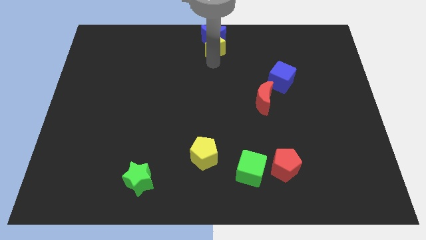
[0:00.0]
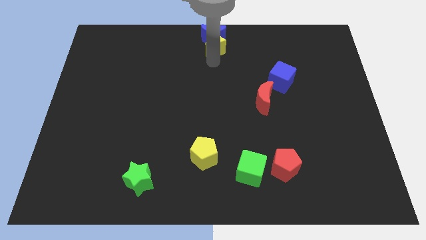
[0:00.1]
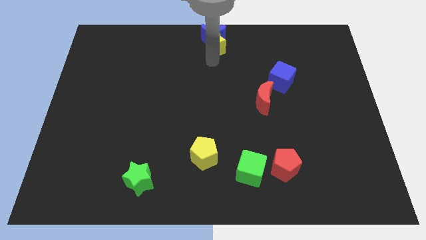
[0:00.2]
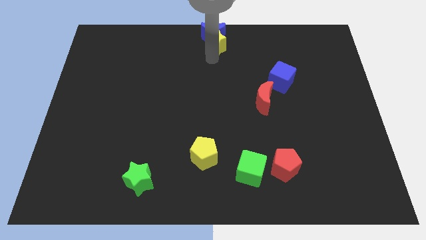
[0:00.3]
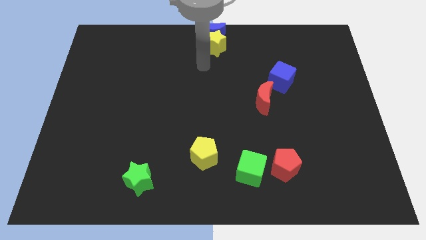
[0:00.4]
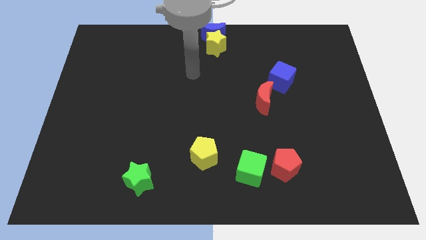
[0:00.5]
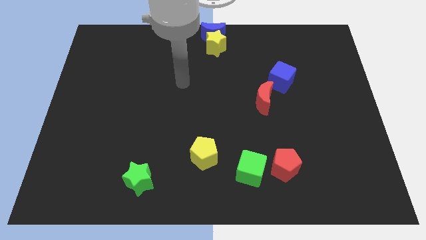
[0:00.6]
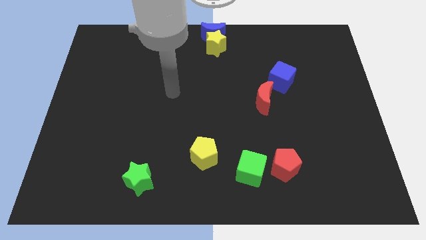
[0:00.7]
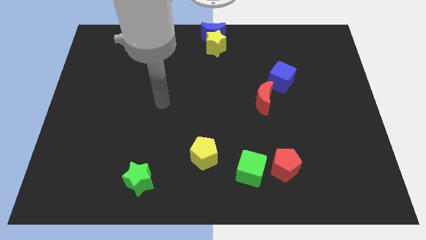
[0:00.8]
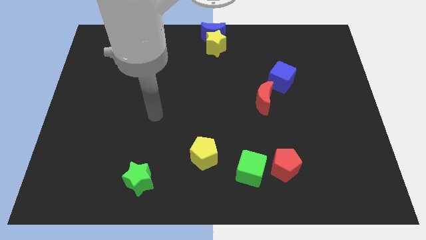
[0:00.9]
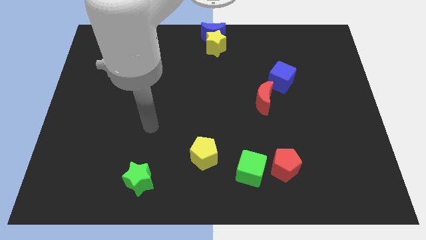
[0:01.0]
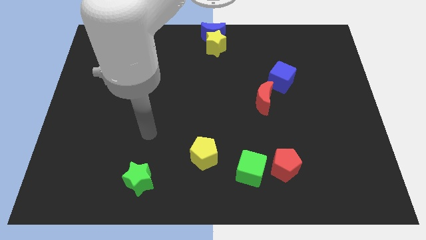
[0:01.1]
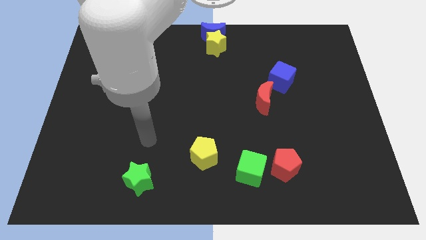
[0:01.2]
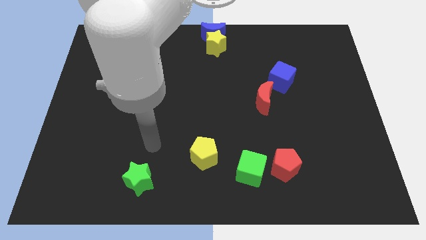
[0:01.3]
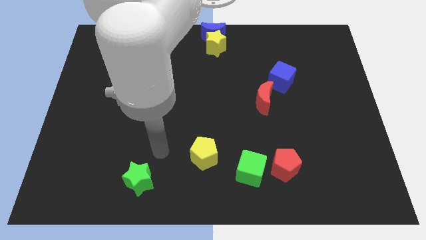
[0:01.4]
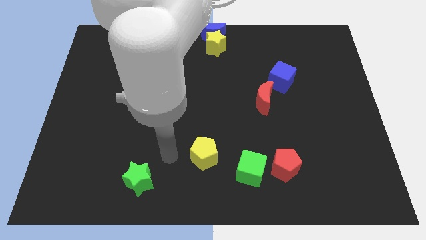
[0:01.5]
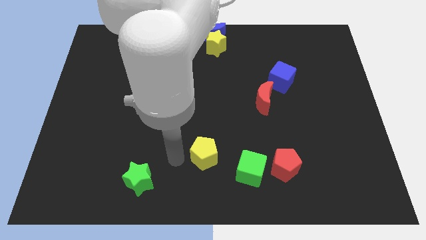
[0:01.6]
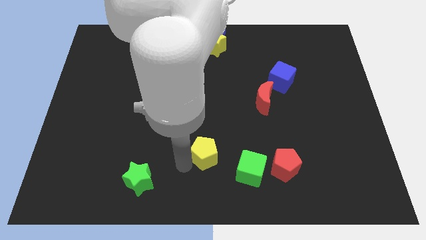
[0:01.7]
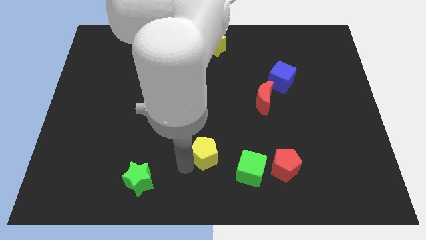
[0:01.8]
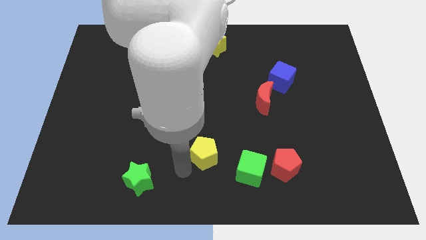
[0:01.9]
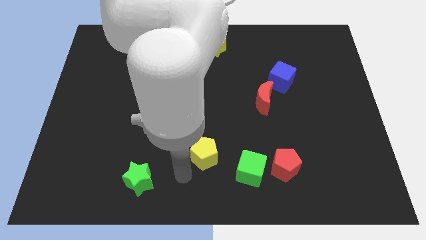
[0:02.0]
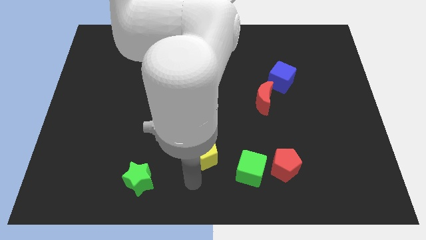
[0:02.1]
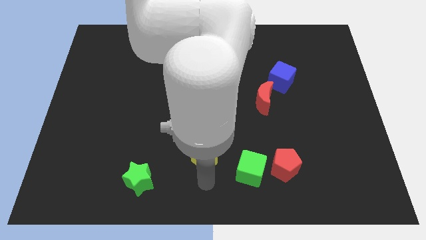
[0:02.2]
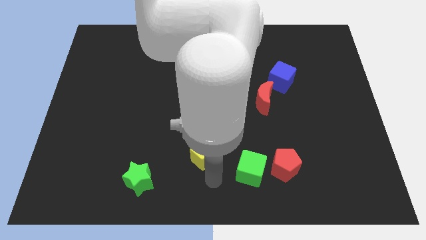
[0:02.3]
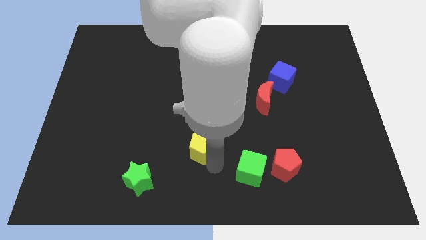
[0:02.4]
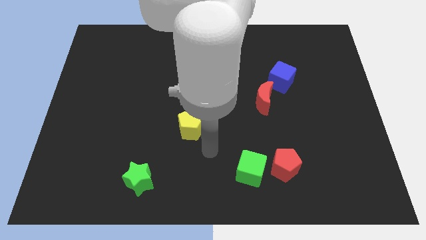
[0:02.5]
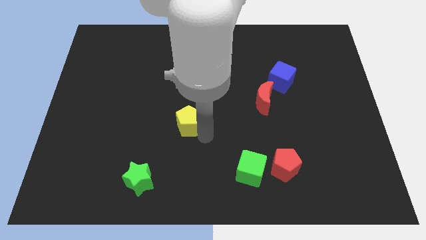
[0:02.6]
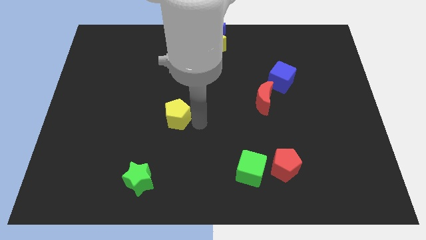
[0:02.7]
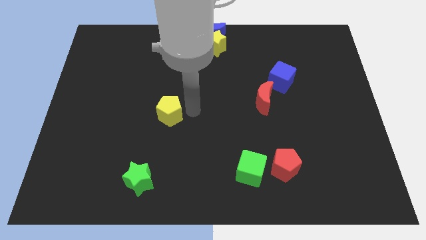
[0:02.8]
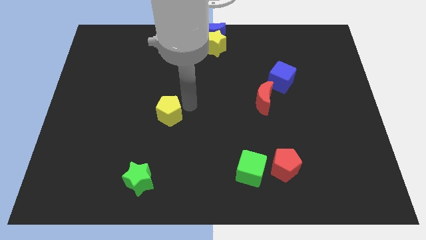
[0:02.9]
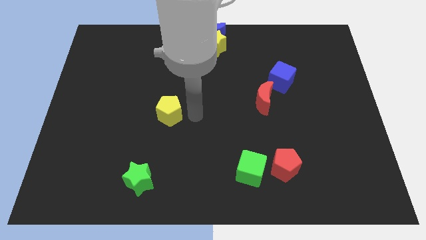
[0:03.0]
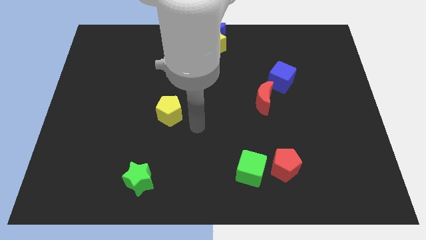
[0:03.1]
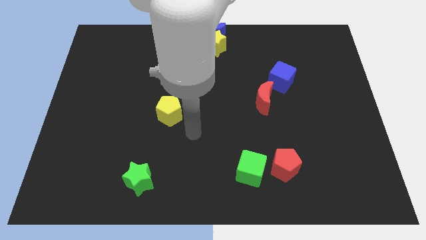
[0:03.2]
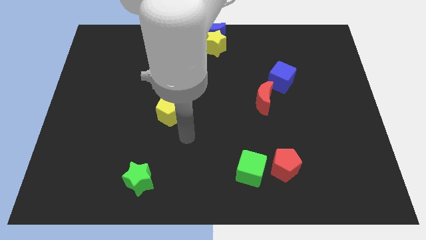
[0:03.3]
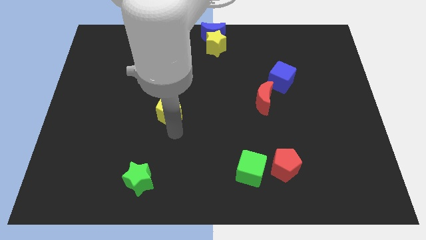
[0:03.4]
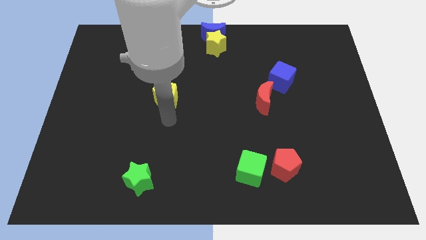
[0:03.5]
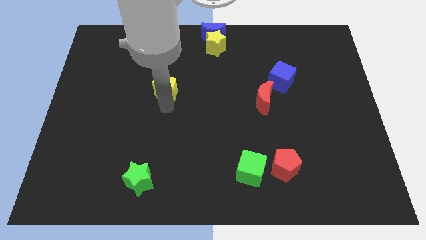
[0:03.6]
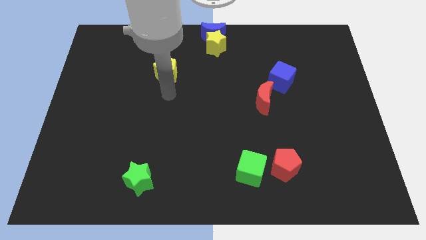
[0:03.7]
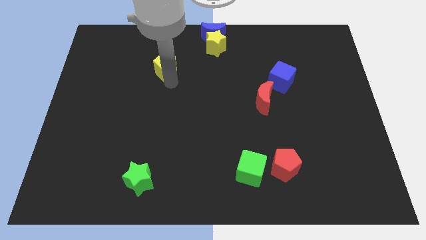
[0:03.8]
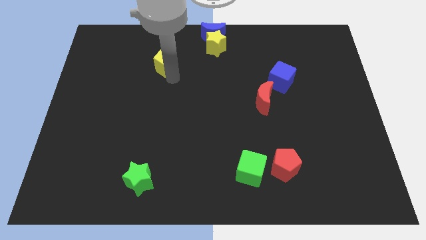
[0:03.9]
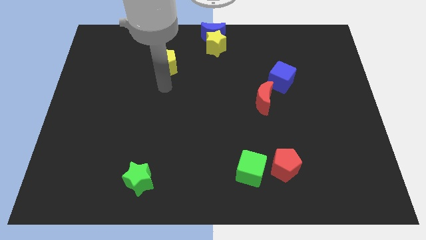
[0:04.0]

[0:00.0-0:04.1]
place the yellow pentagon diagonally to the bottom left to the yellow star

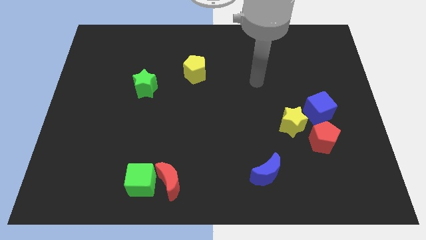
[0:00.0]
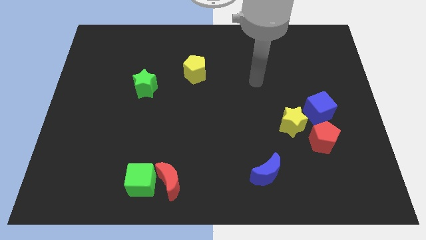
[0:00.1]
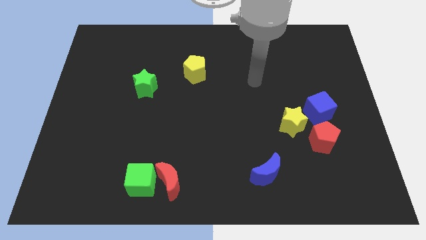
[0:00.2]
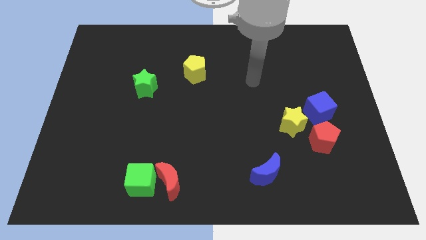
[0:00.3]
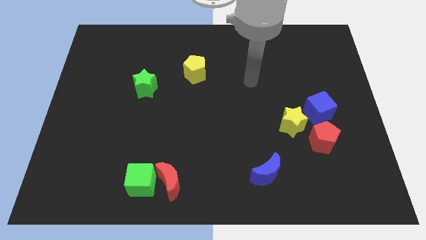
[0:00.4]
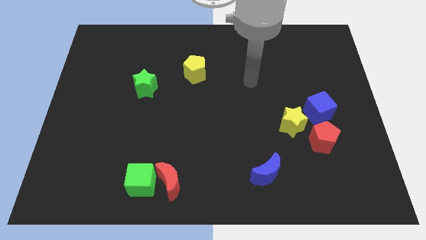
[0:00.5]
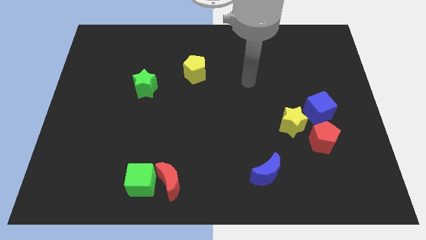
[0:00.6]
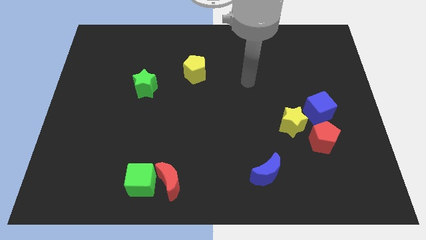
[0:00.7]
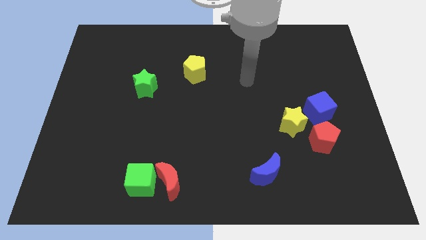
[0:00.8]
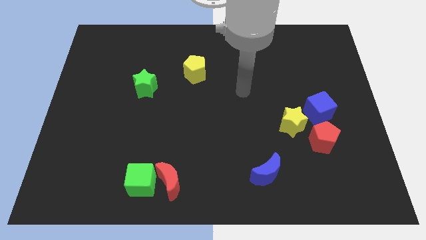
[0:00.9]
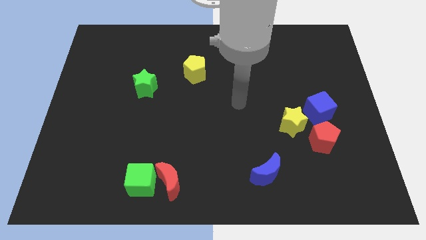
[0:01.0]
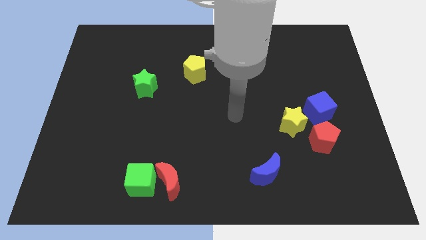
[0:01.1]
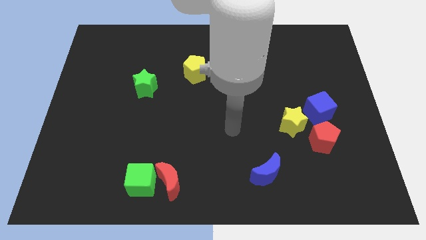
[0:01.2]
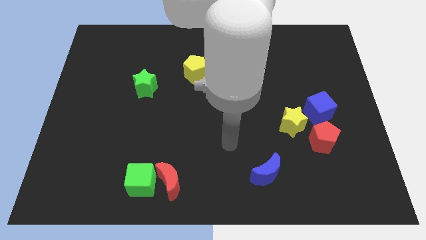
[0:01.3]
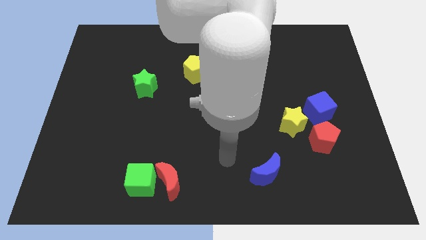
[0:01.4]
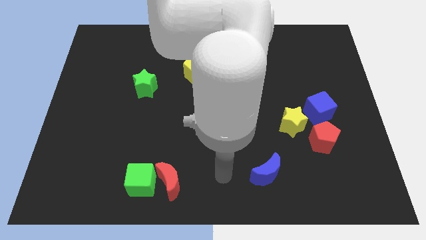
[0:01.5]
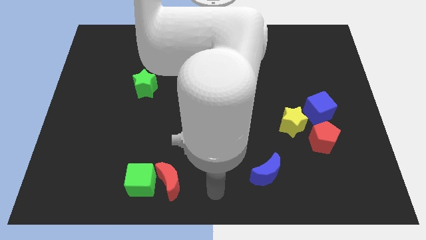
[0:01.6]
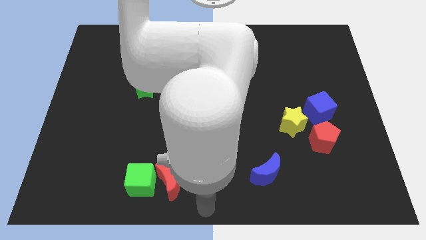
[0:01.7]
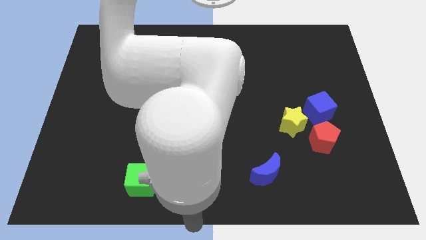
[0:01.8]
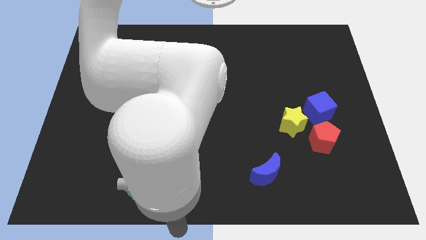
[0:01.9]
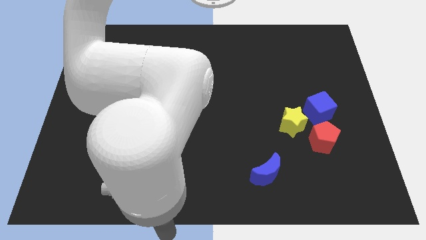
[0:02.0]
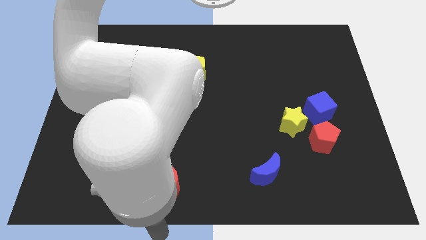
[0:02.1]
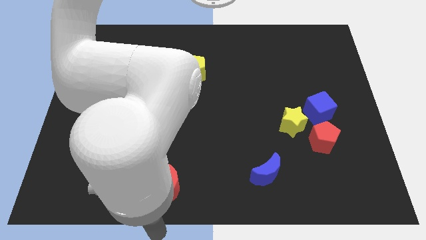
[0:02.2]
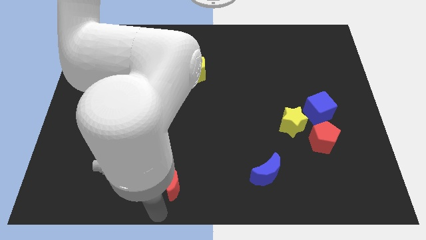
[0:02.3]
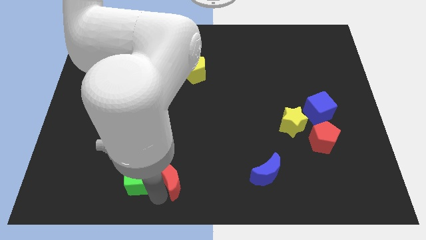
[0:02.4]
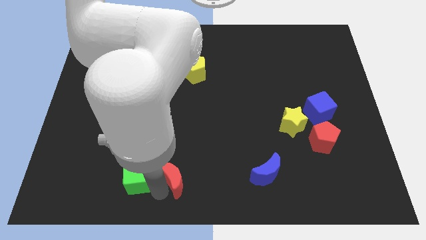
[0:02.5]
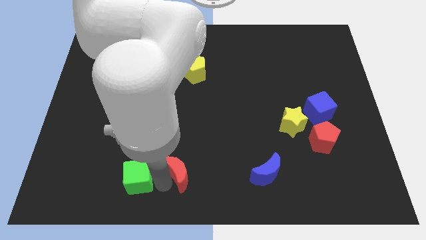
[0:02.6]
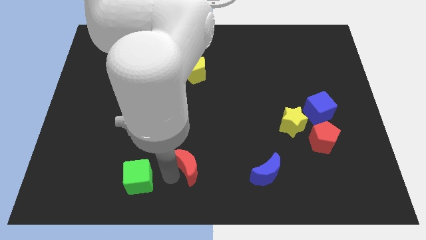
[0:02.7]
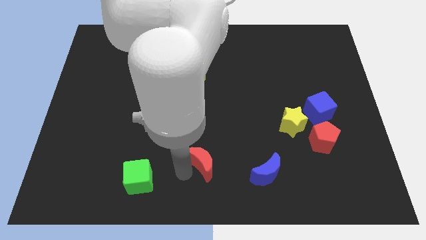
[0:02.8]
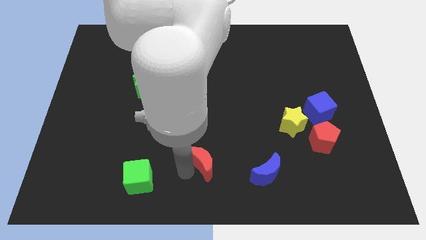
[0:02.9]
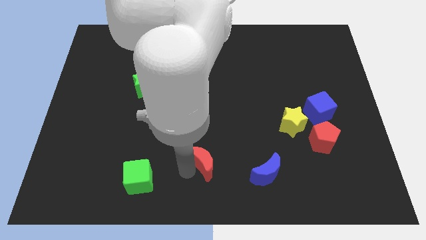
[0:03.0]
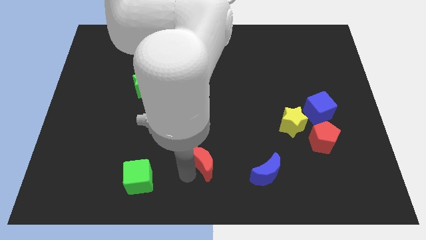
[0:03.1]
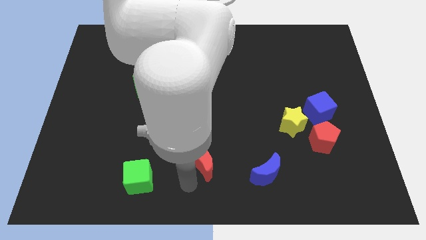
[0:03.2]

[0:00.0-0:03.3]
separate green cube and red moon

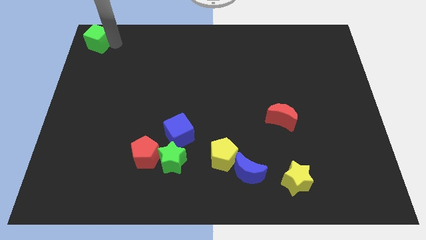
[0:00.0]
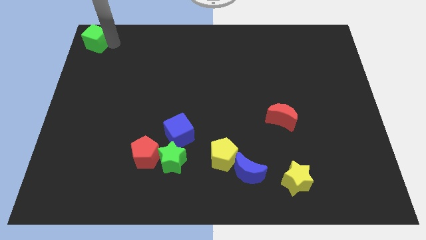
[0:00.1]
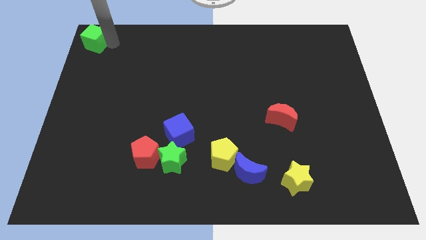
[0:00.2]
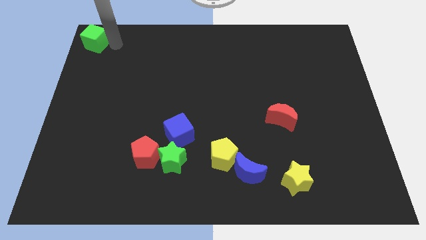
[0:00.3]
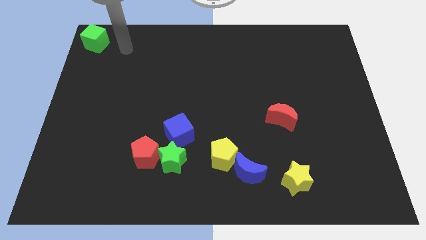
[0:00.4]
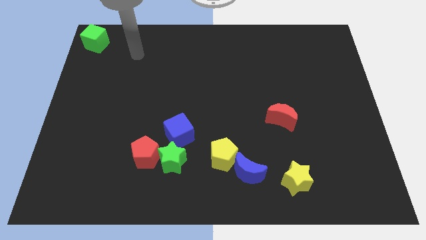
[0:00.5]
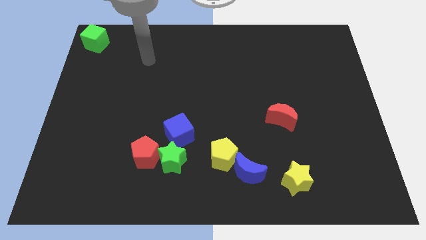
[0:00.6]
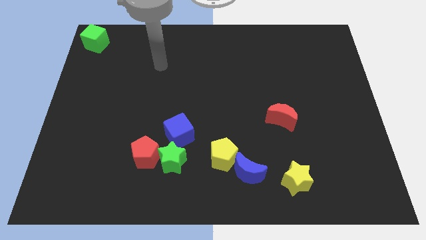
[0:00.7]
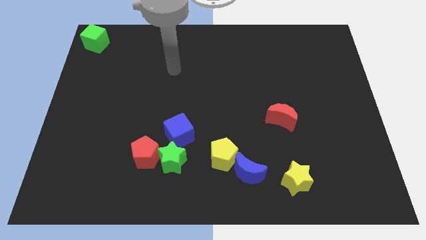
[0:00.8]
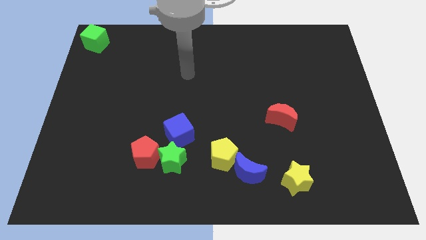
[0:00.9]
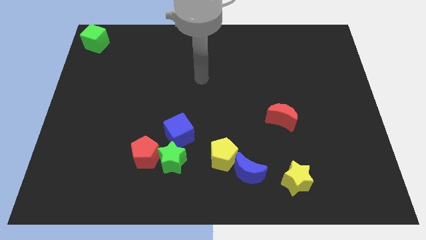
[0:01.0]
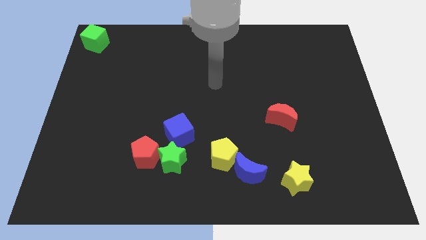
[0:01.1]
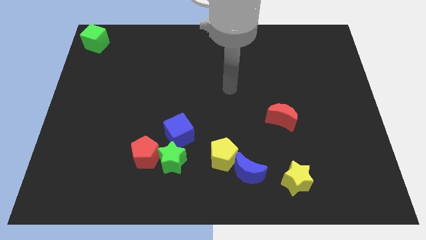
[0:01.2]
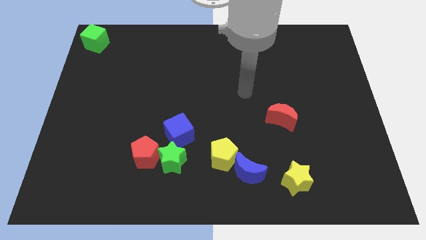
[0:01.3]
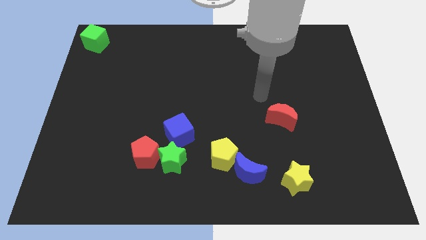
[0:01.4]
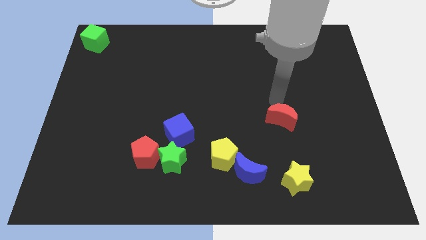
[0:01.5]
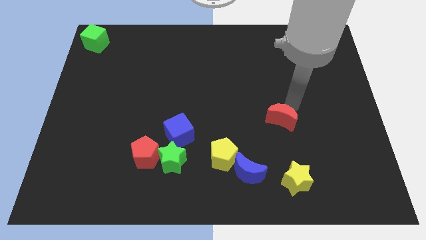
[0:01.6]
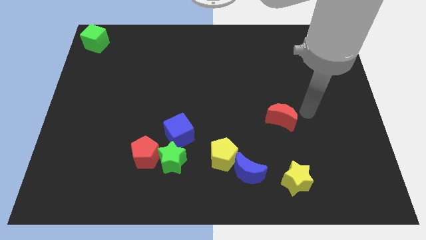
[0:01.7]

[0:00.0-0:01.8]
move the arm away from the green cube
